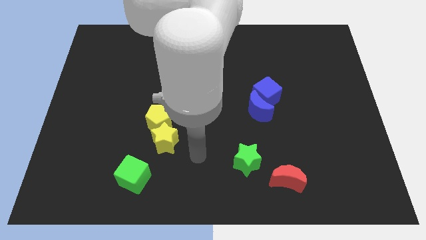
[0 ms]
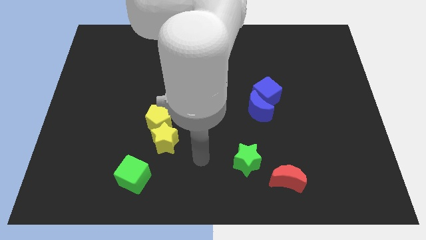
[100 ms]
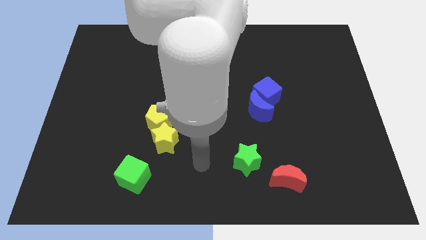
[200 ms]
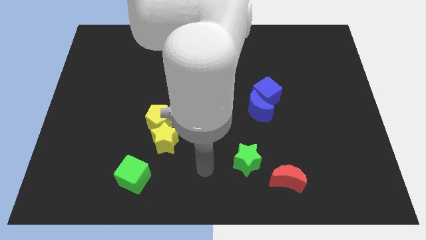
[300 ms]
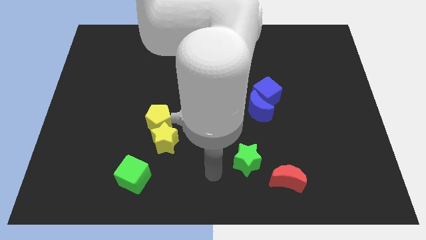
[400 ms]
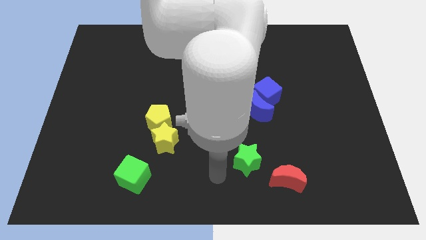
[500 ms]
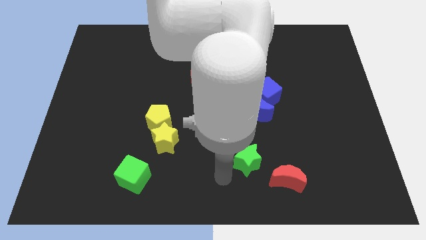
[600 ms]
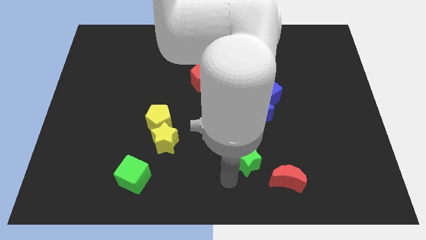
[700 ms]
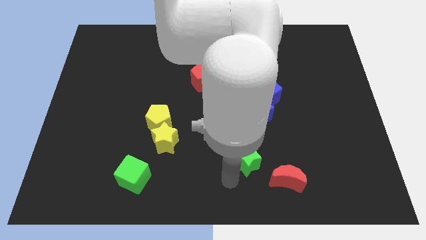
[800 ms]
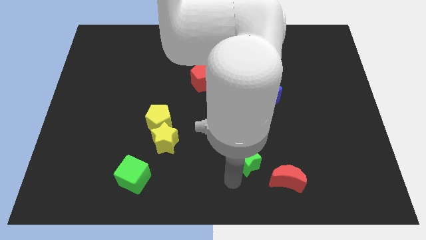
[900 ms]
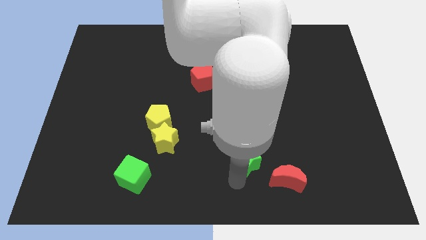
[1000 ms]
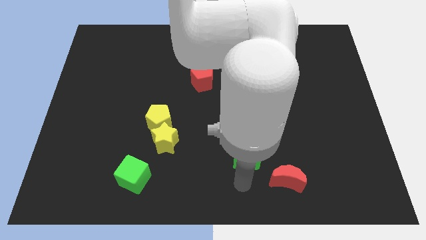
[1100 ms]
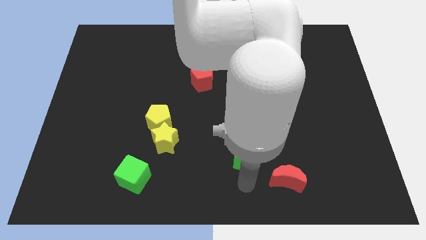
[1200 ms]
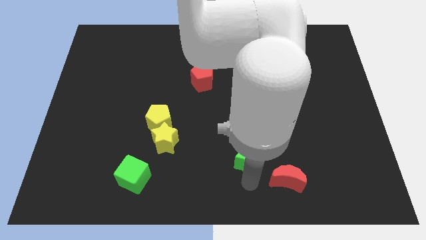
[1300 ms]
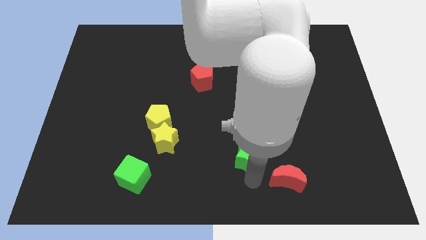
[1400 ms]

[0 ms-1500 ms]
move the arm to the green star

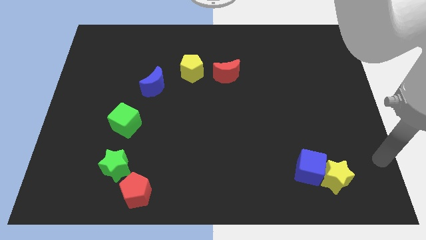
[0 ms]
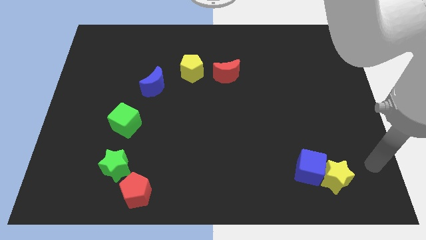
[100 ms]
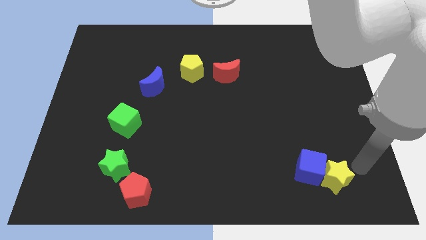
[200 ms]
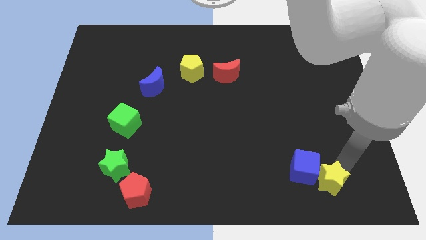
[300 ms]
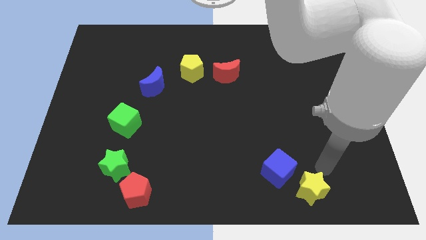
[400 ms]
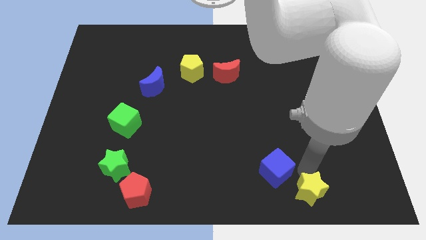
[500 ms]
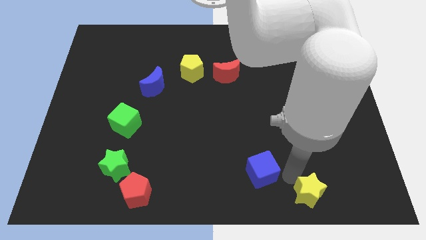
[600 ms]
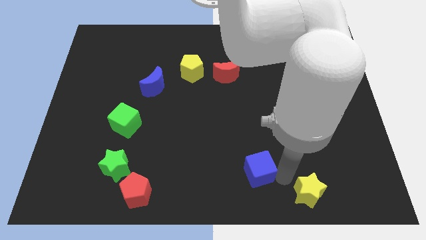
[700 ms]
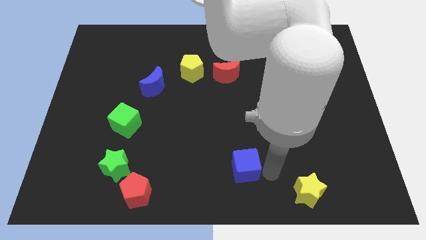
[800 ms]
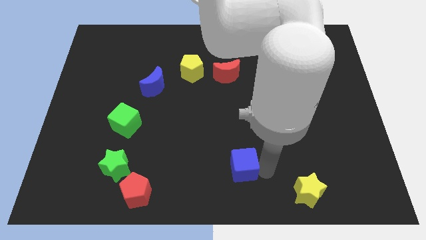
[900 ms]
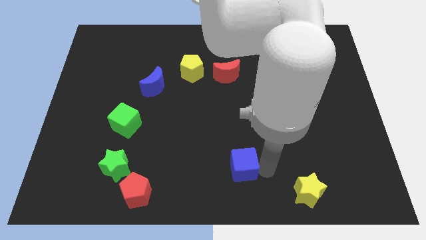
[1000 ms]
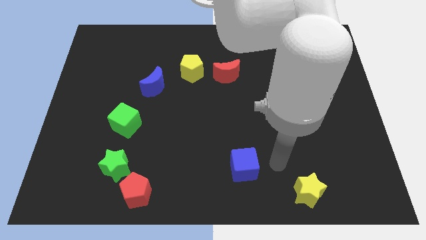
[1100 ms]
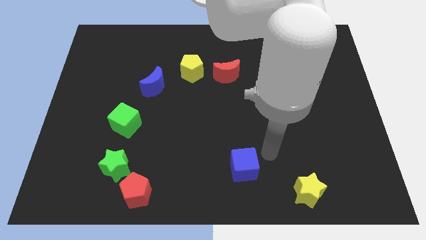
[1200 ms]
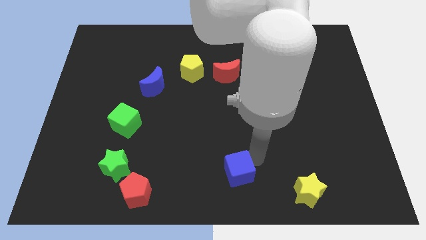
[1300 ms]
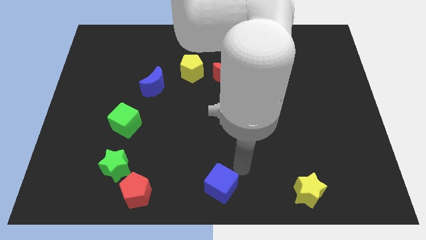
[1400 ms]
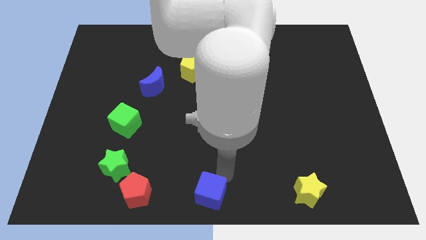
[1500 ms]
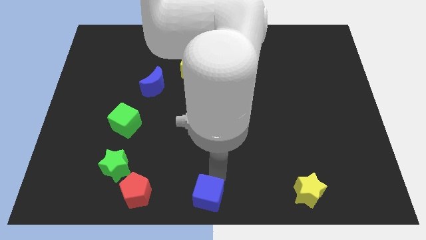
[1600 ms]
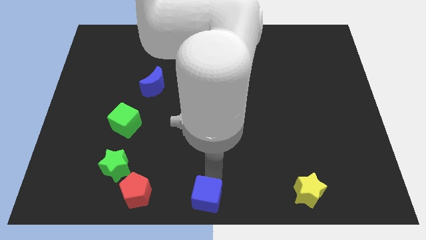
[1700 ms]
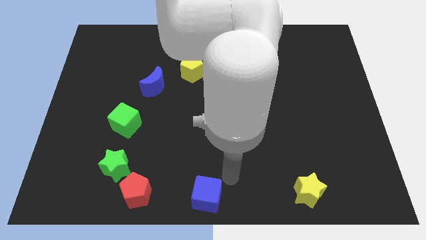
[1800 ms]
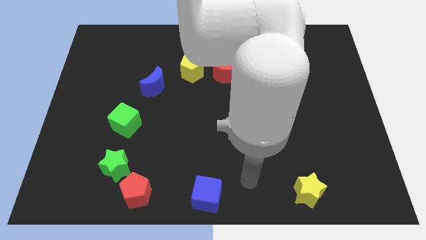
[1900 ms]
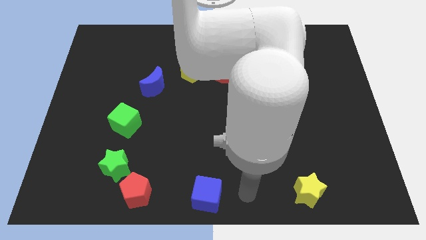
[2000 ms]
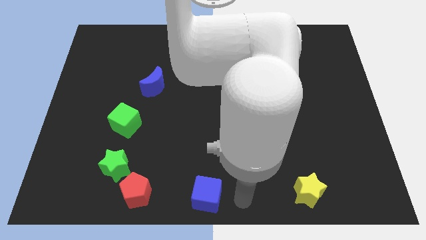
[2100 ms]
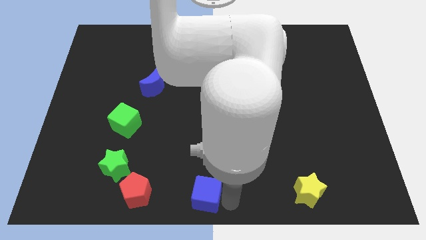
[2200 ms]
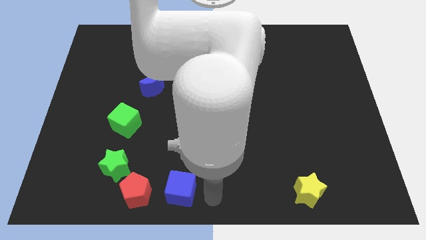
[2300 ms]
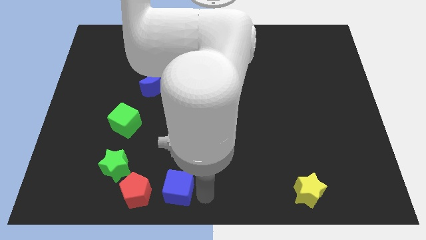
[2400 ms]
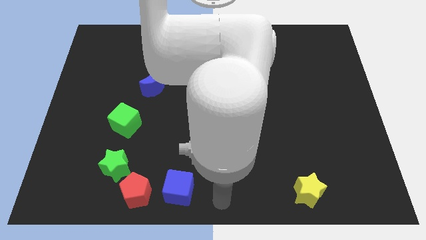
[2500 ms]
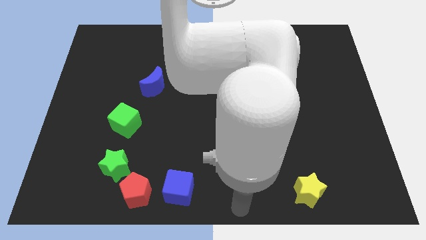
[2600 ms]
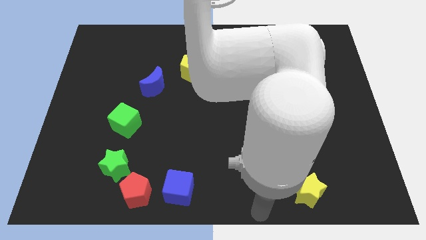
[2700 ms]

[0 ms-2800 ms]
push the blue cube towards the red pentagon

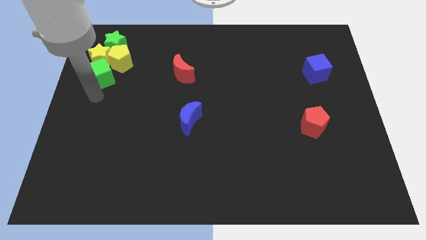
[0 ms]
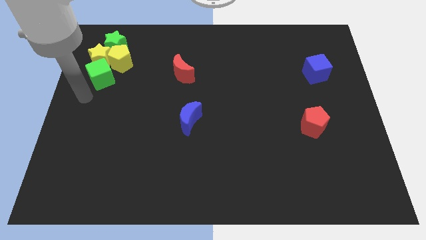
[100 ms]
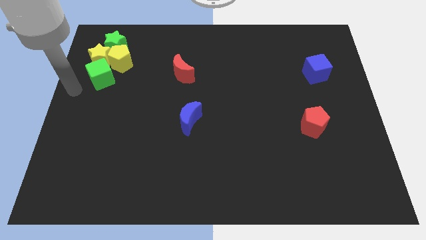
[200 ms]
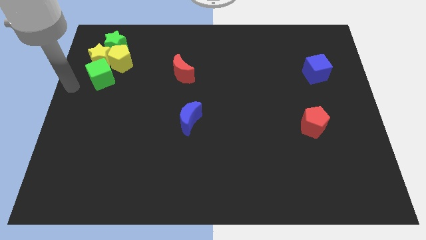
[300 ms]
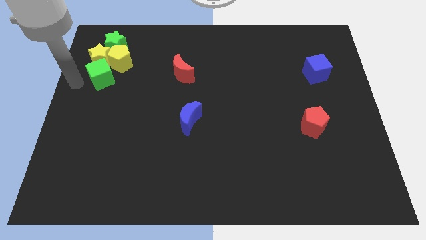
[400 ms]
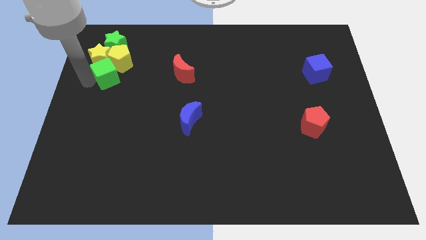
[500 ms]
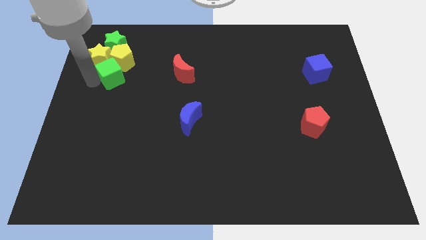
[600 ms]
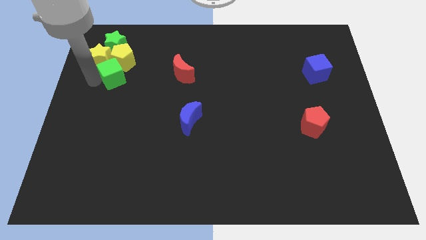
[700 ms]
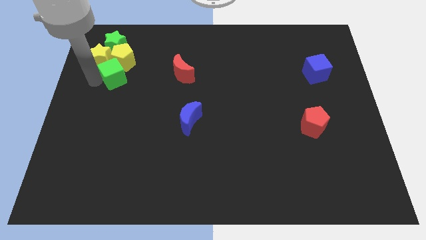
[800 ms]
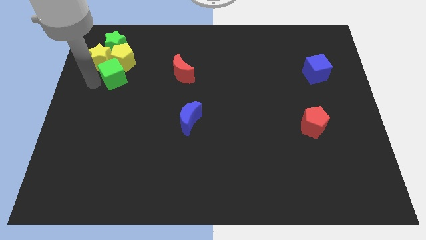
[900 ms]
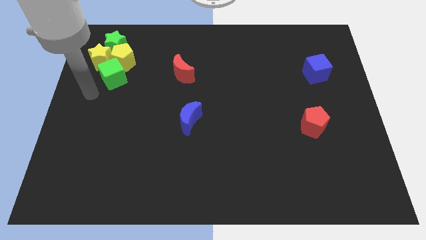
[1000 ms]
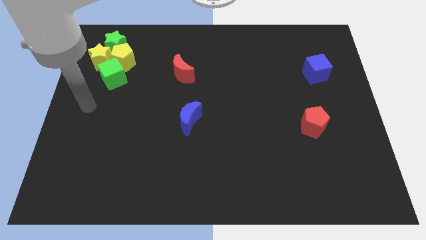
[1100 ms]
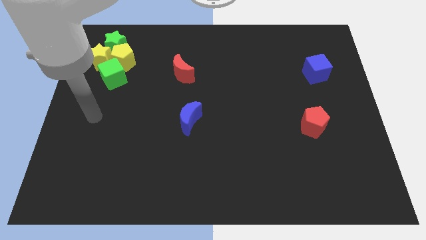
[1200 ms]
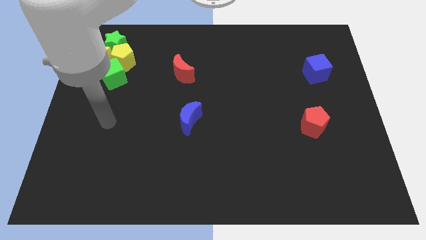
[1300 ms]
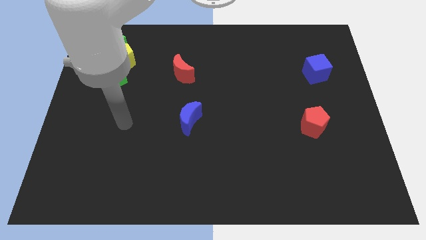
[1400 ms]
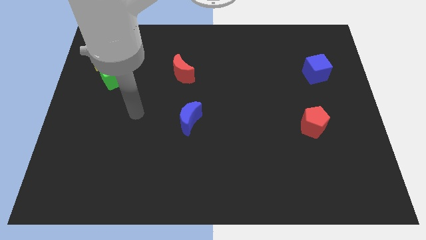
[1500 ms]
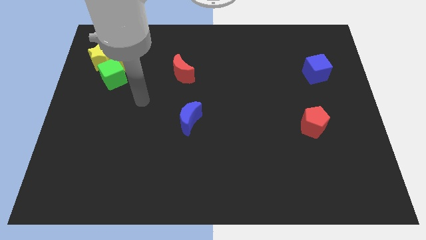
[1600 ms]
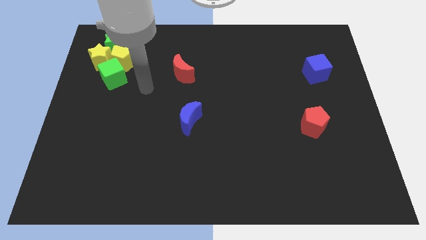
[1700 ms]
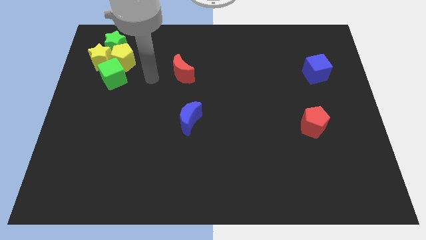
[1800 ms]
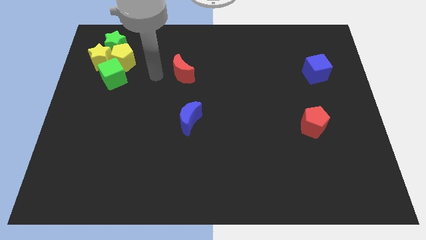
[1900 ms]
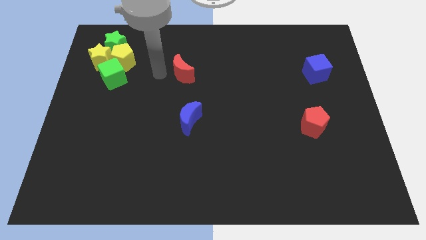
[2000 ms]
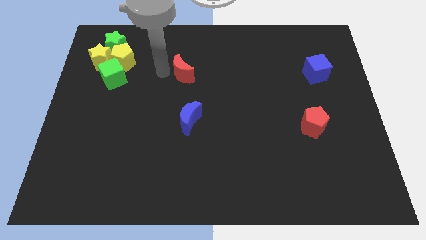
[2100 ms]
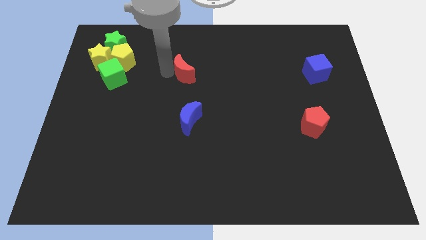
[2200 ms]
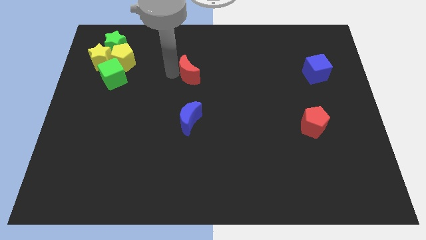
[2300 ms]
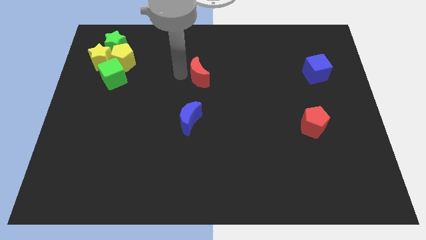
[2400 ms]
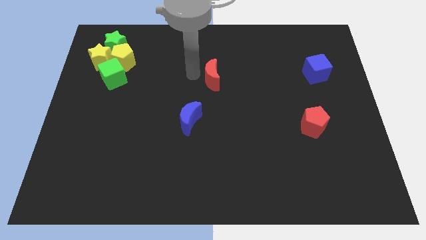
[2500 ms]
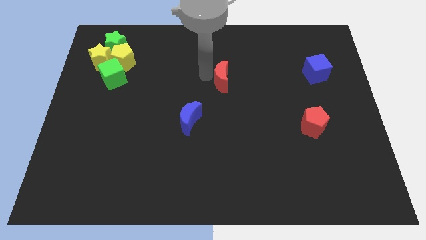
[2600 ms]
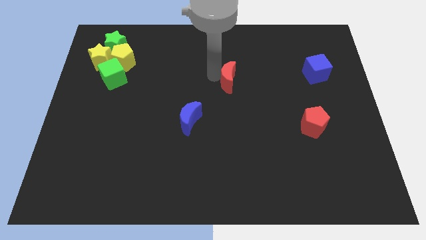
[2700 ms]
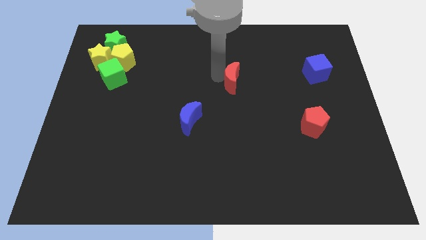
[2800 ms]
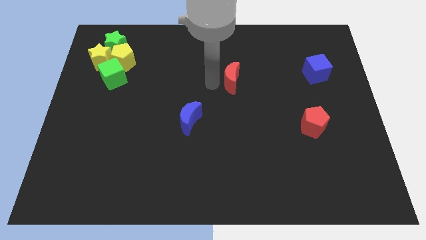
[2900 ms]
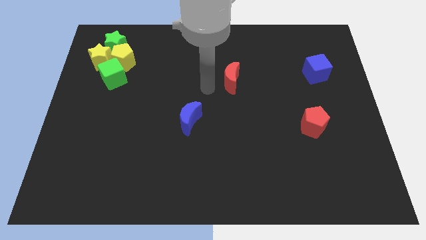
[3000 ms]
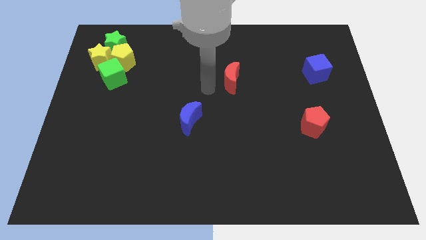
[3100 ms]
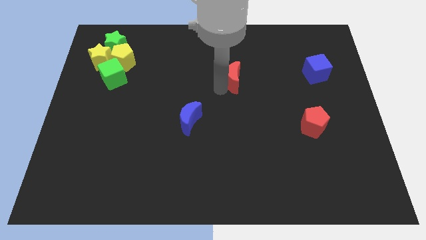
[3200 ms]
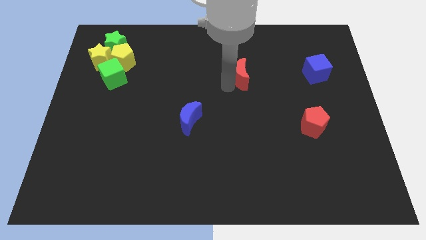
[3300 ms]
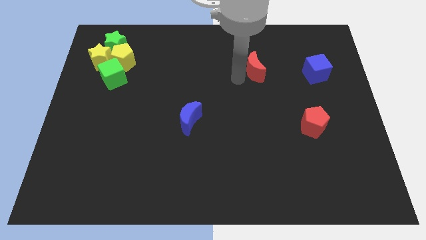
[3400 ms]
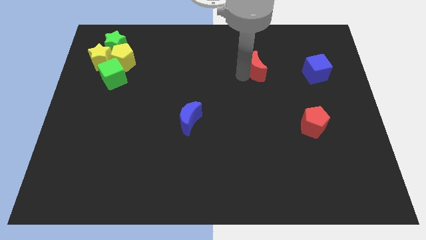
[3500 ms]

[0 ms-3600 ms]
slightly touch green cube move red moon to the center

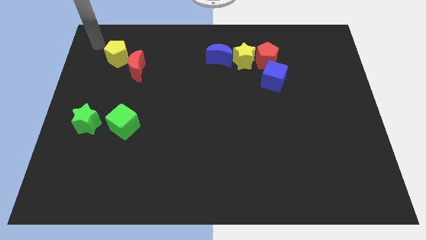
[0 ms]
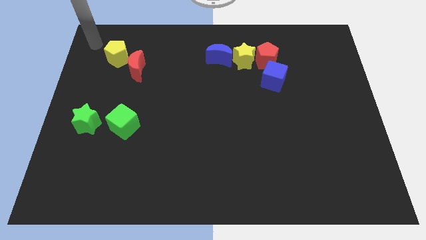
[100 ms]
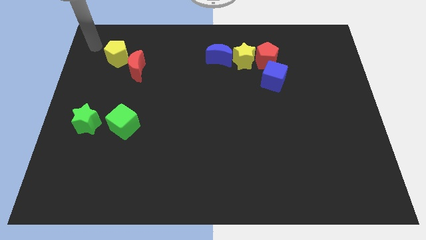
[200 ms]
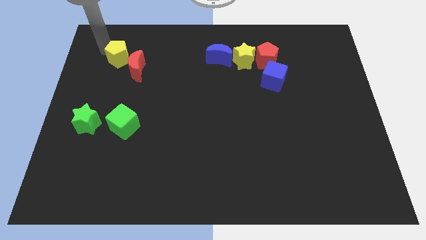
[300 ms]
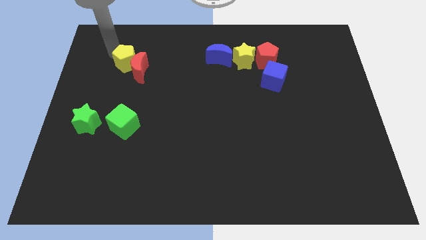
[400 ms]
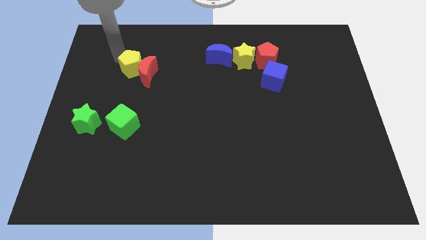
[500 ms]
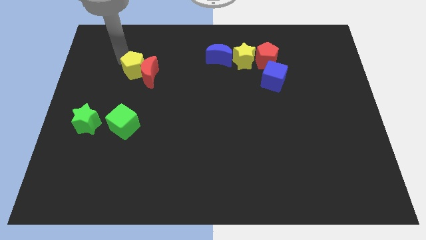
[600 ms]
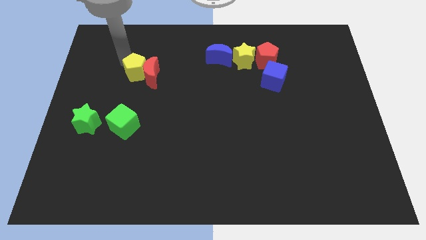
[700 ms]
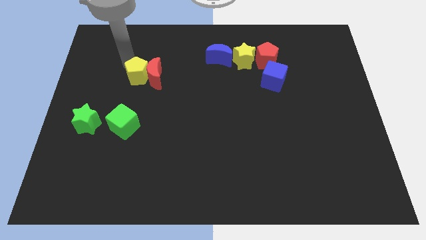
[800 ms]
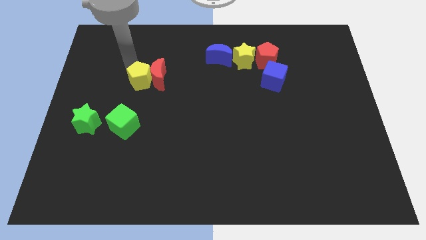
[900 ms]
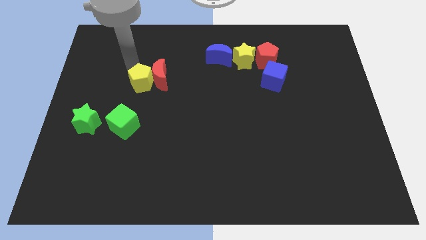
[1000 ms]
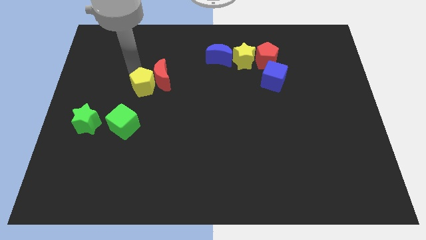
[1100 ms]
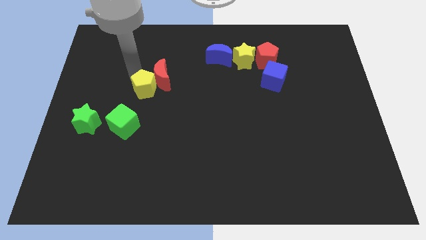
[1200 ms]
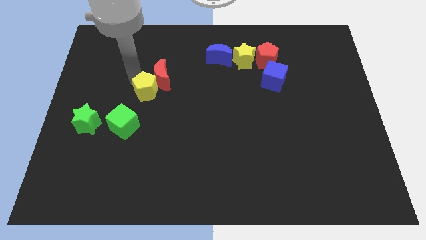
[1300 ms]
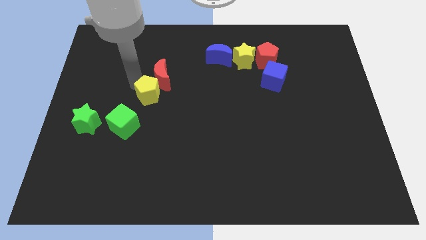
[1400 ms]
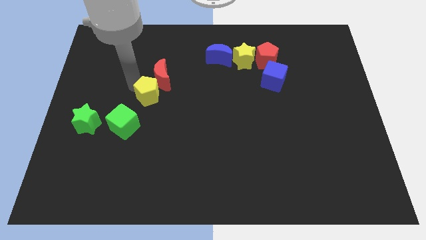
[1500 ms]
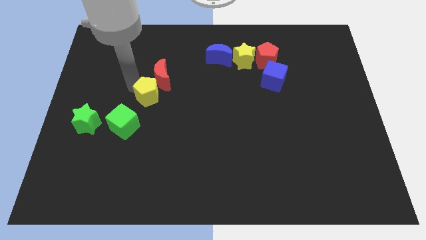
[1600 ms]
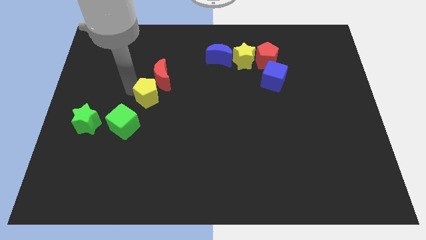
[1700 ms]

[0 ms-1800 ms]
push the yellow pentagon and red moon to the center
